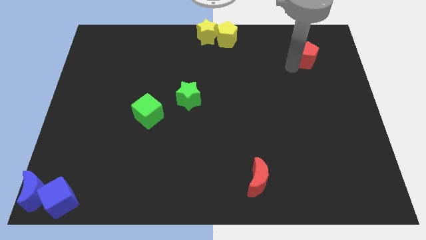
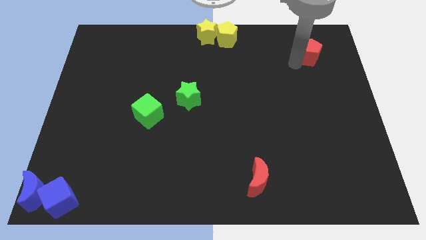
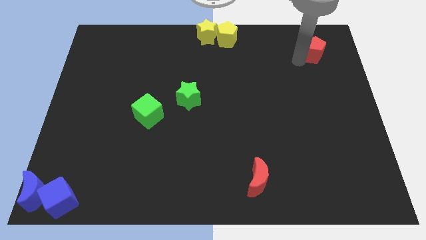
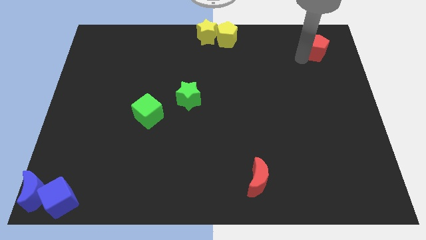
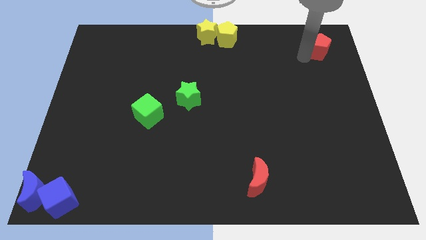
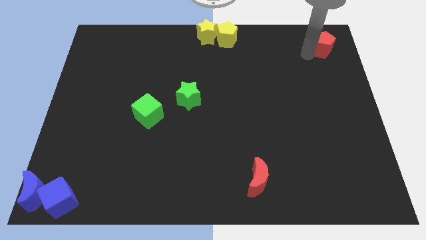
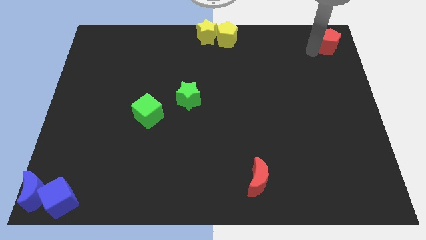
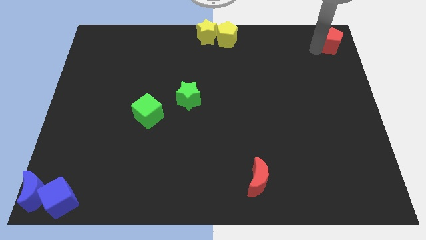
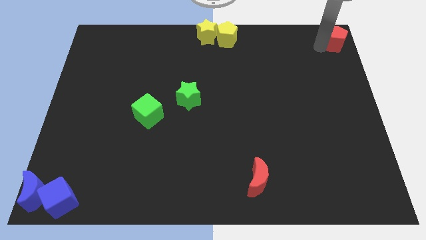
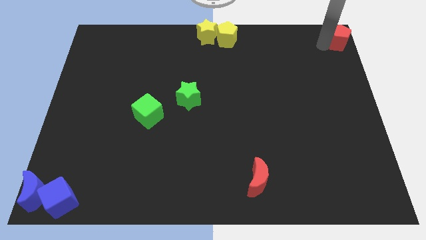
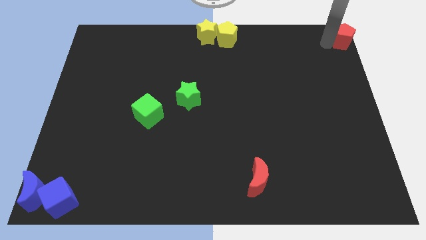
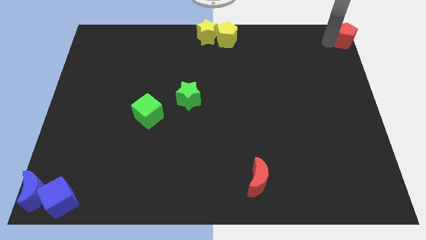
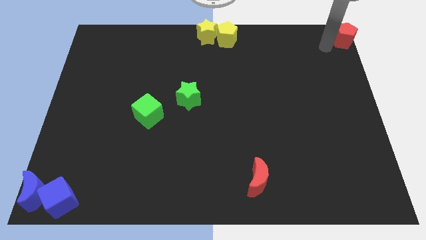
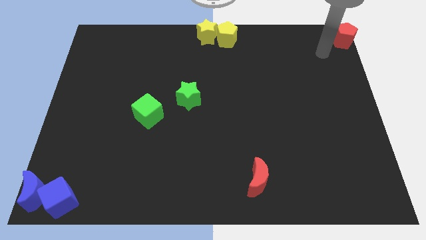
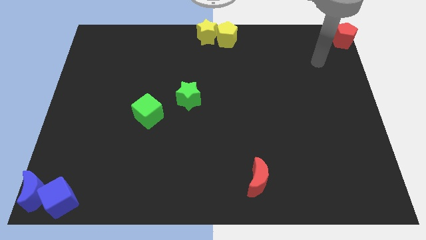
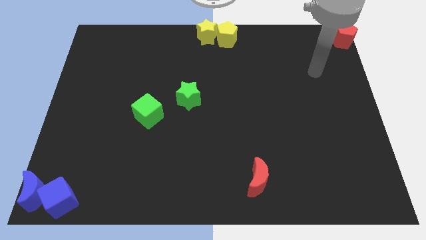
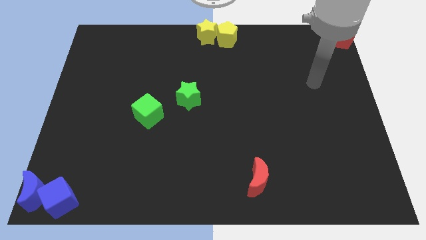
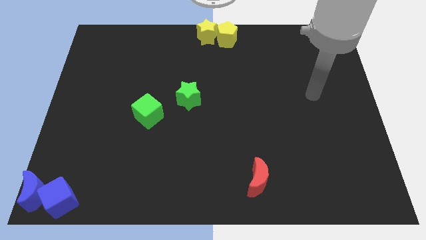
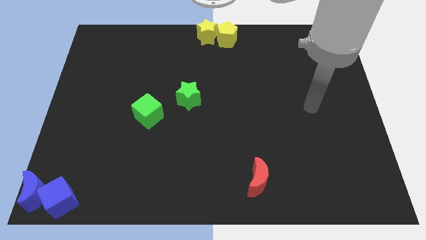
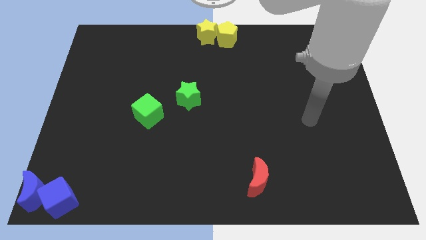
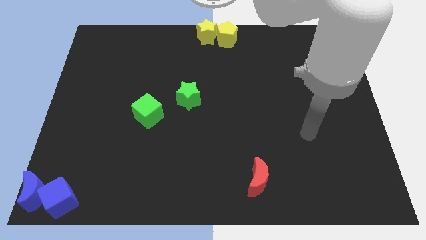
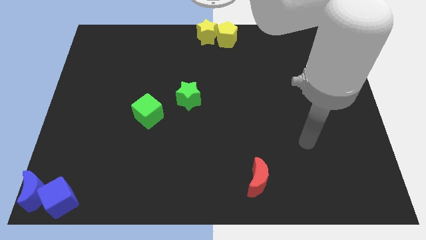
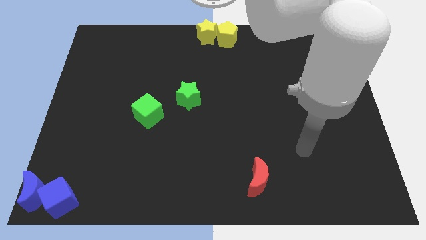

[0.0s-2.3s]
move the red pentagon to the top right of the board

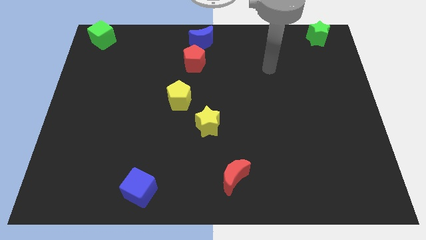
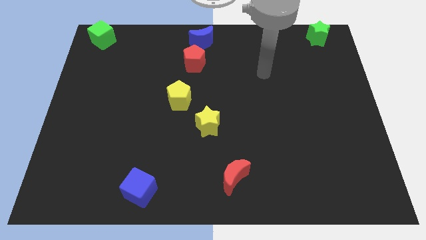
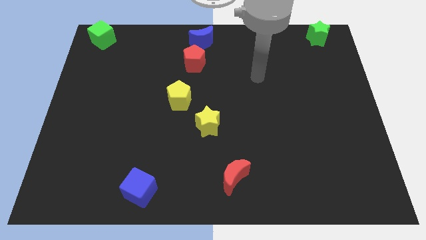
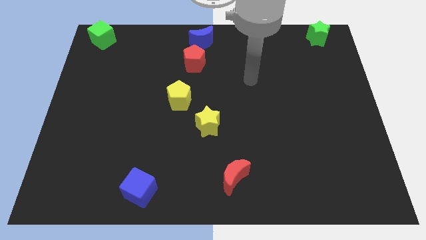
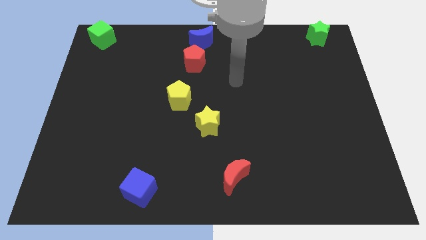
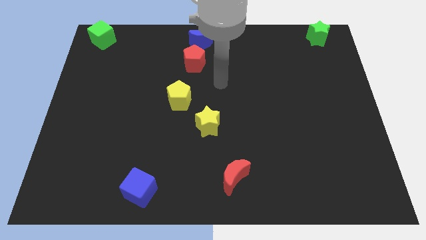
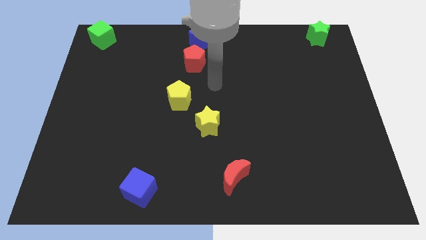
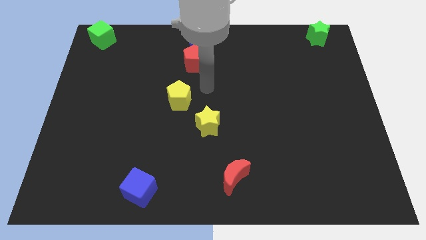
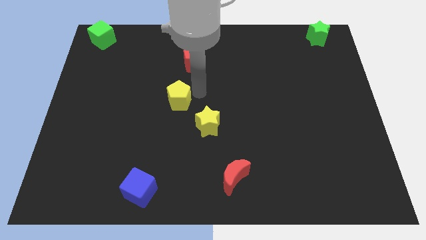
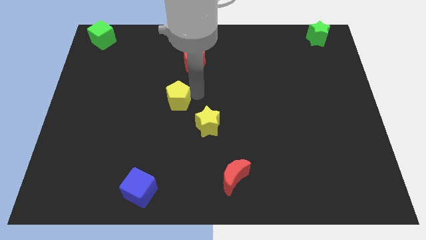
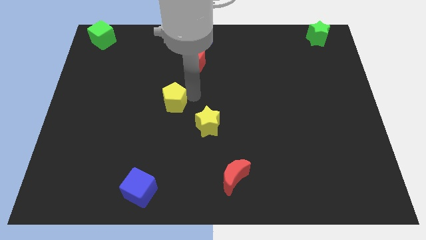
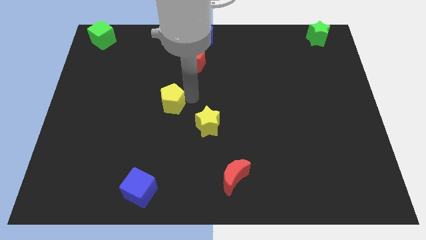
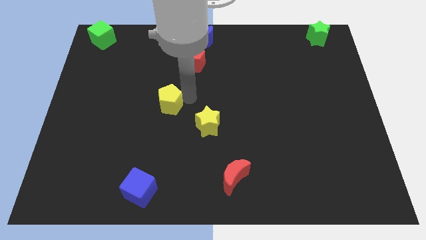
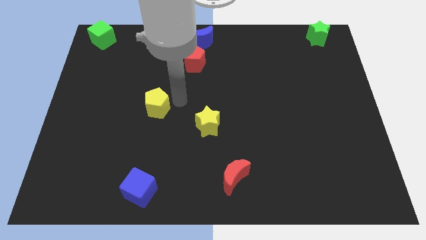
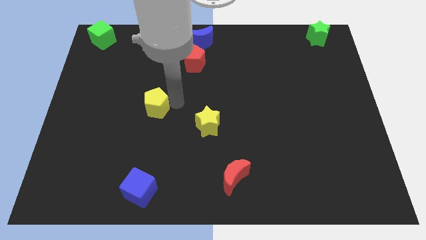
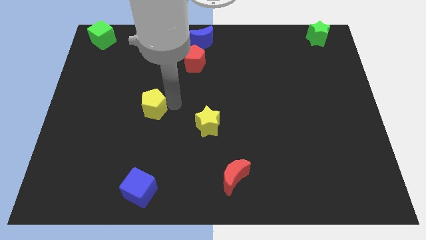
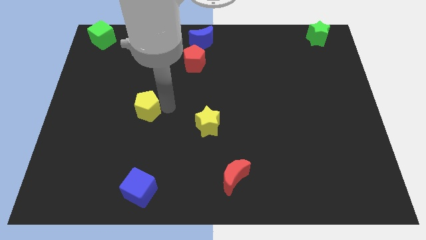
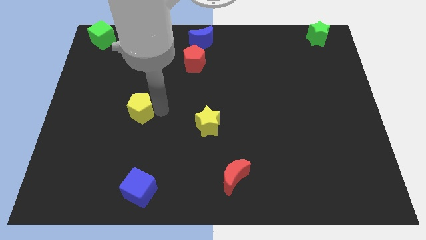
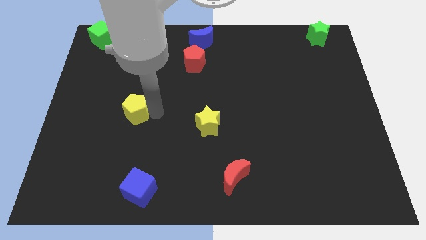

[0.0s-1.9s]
push the yellow pentagon towards the center left side of the board

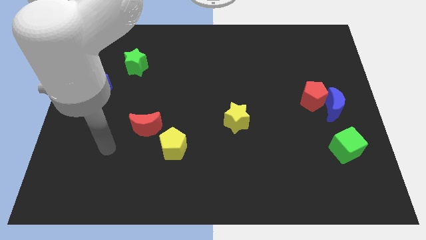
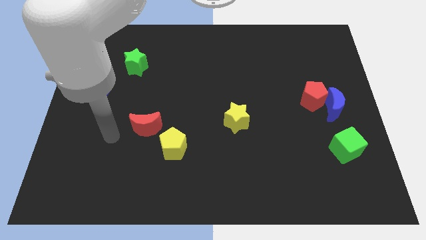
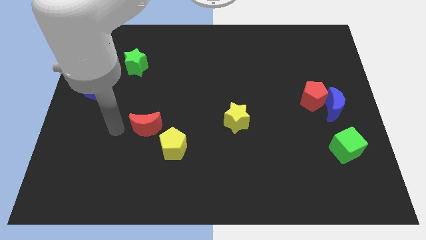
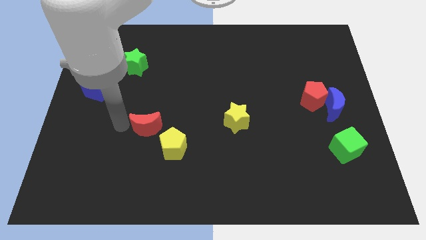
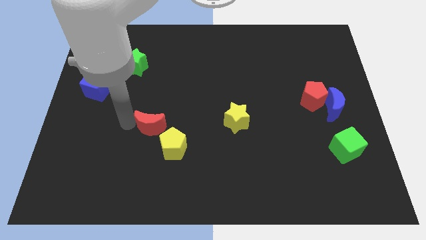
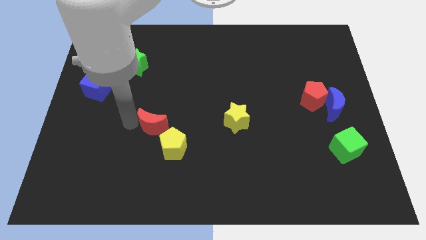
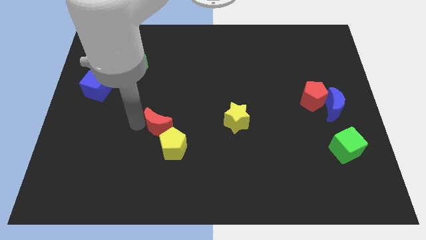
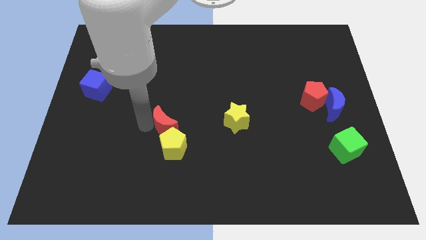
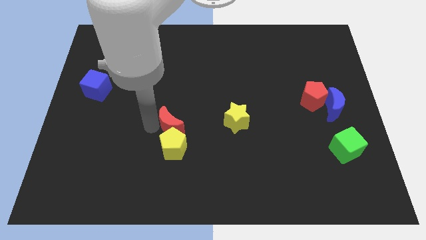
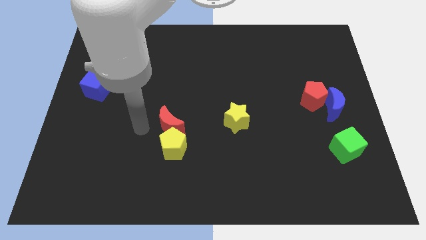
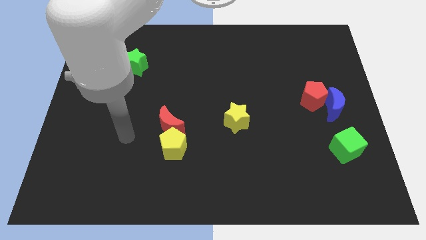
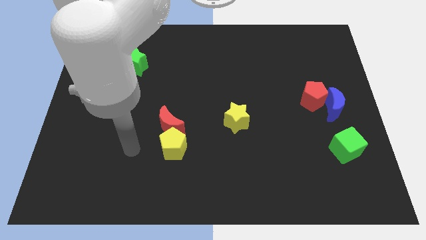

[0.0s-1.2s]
place red crescent on the top of yellow pentagon

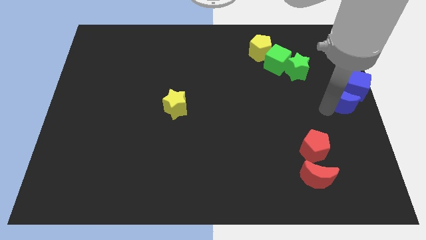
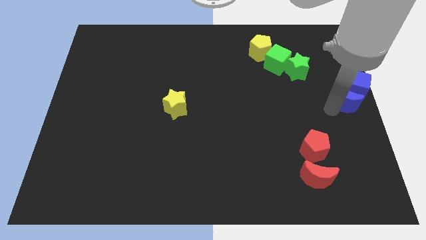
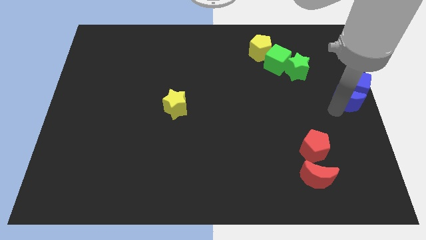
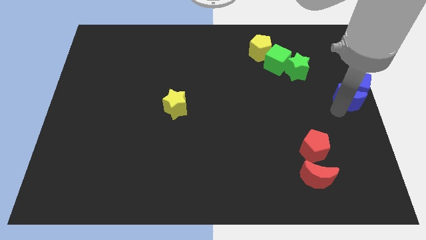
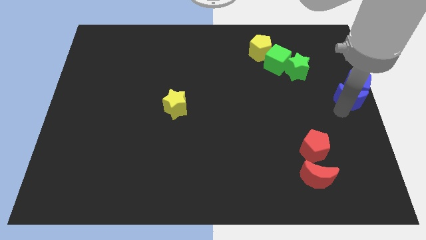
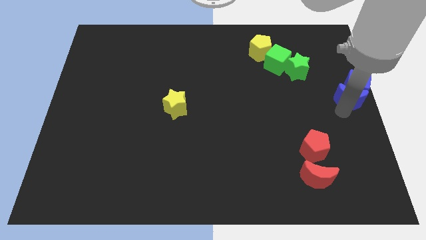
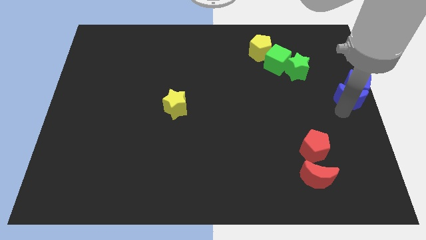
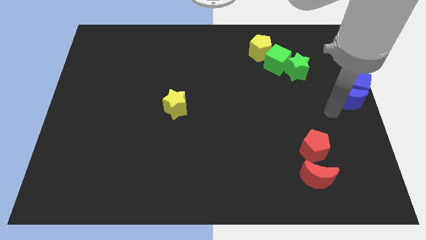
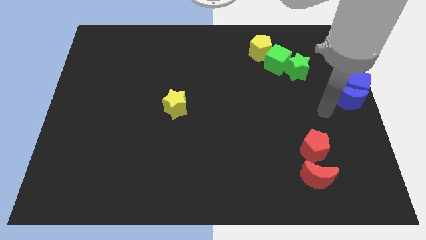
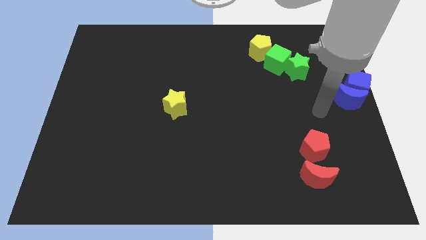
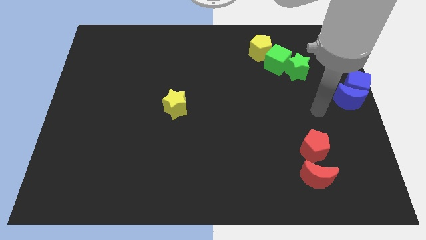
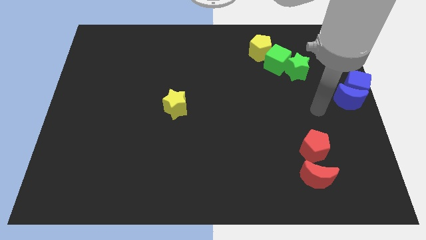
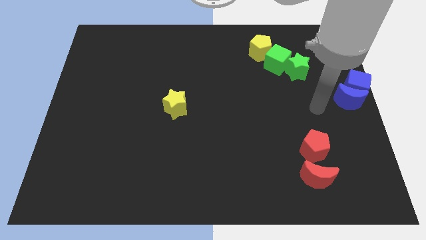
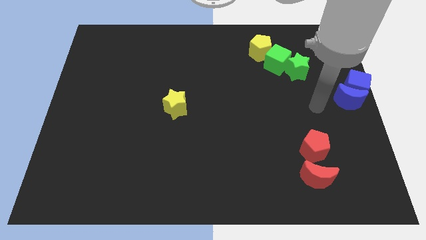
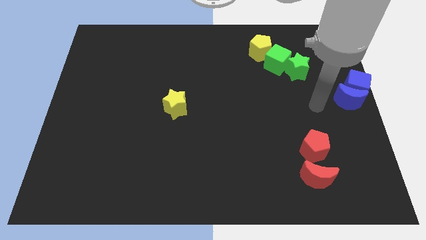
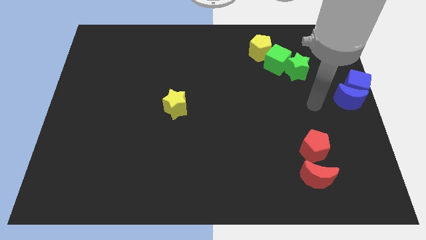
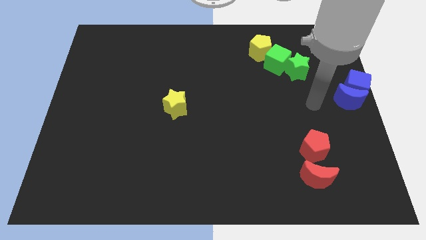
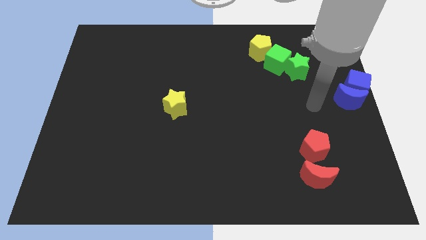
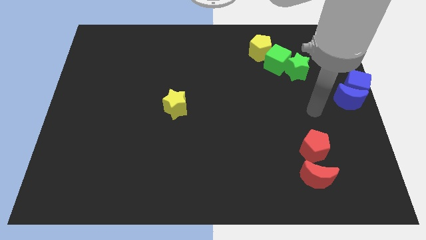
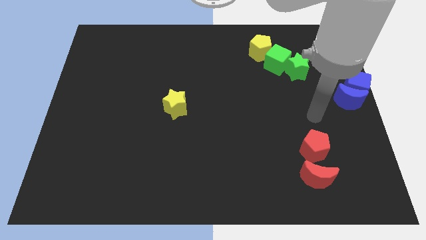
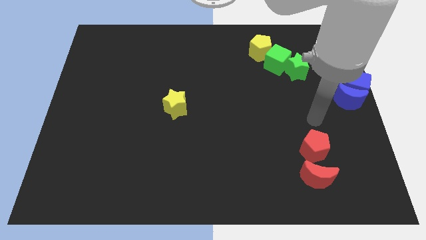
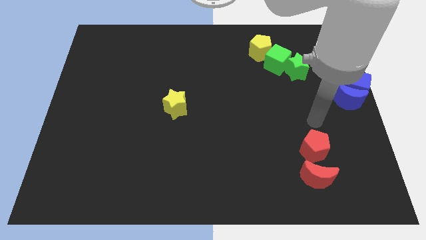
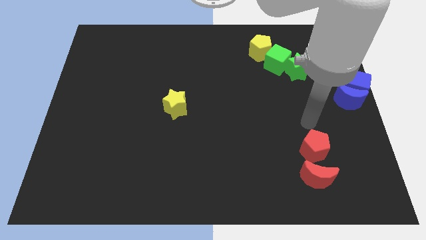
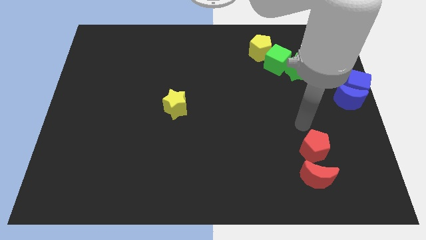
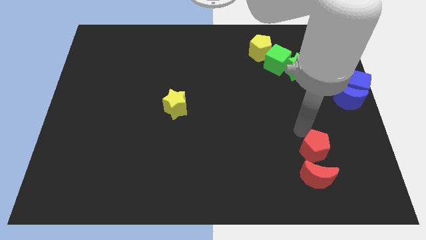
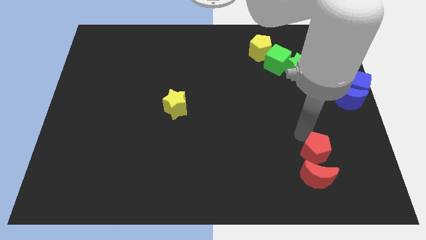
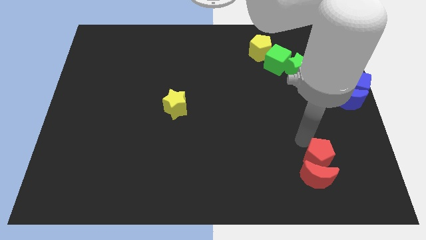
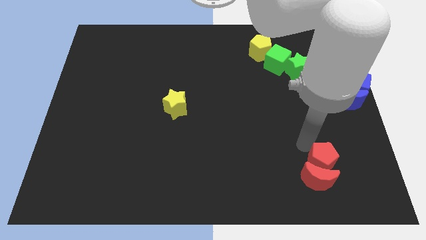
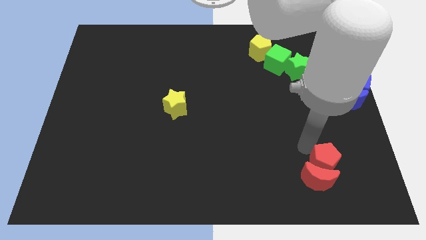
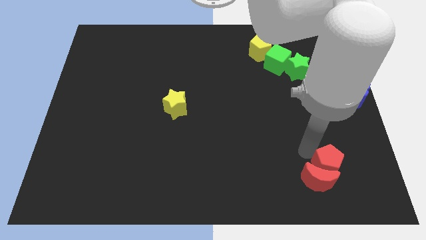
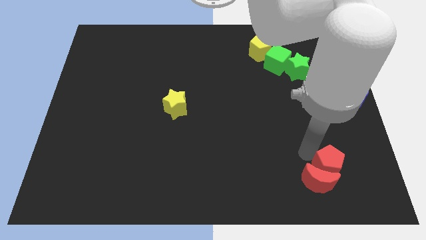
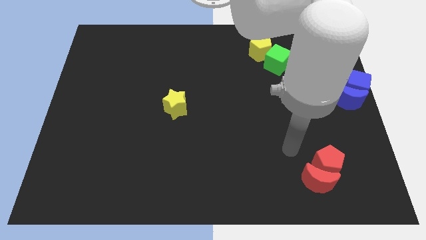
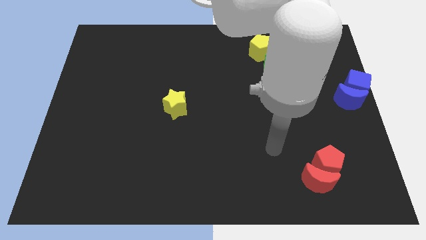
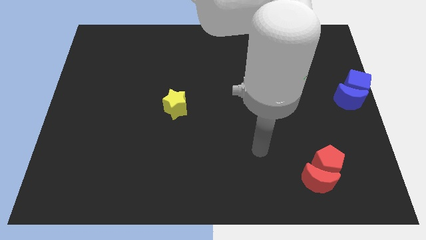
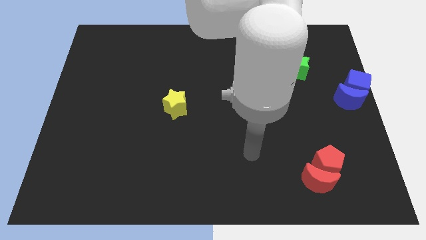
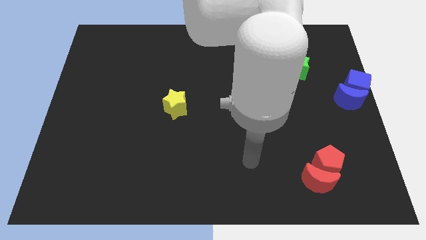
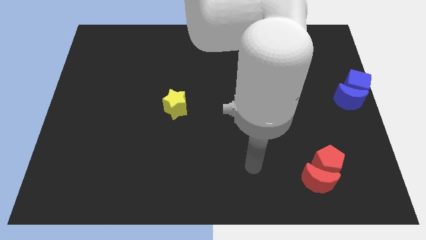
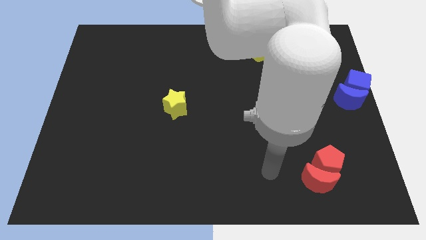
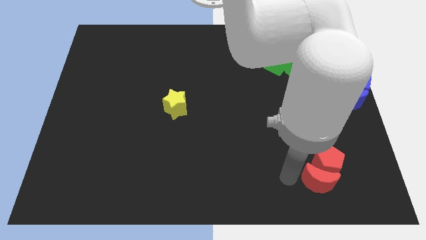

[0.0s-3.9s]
push the red pentagon into the red crescent
